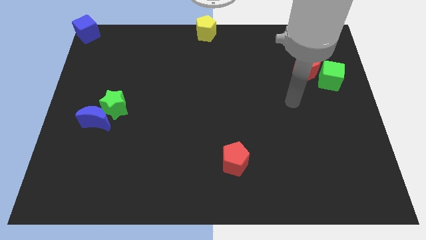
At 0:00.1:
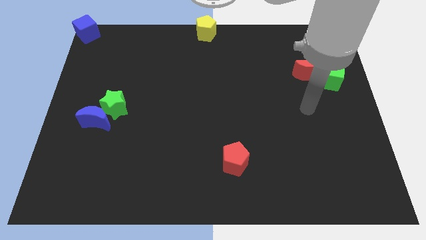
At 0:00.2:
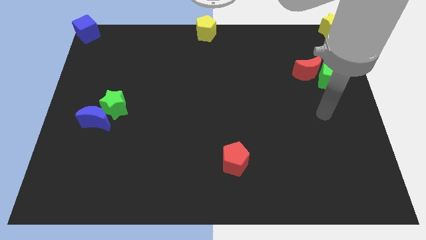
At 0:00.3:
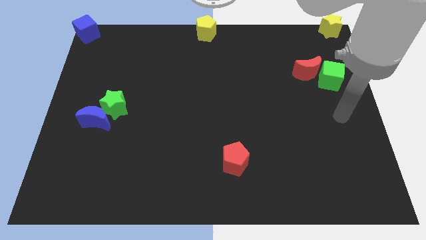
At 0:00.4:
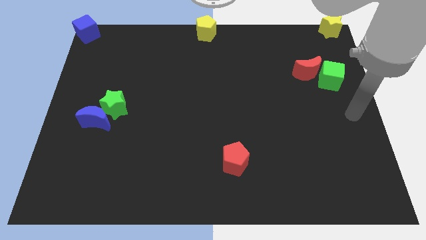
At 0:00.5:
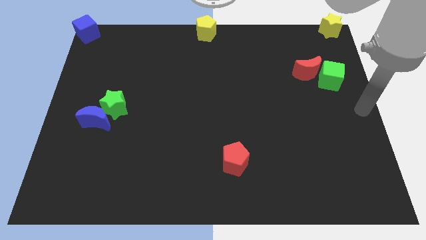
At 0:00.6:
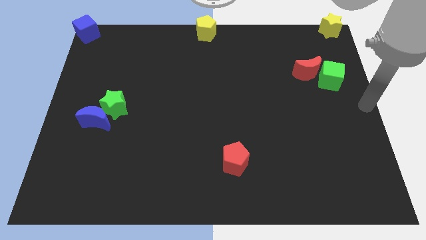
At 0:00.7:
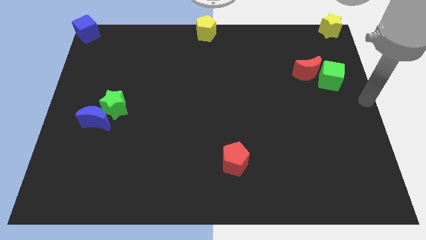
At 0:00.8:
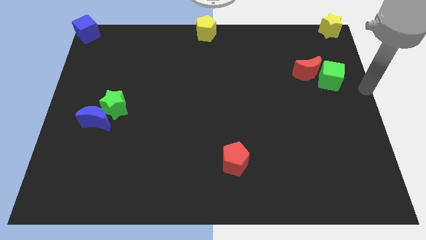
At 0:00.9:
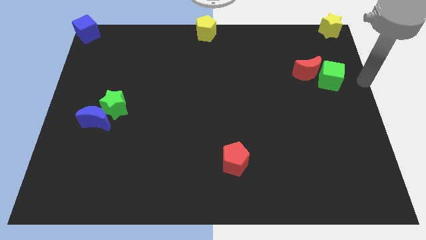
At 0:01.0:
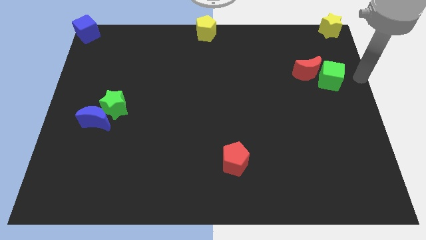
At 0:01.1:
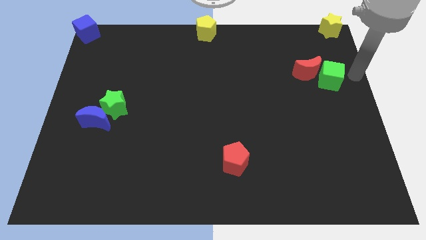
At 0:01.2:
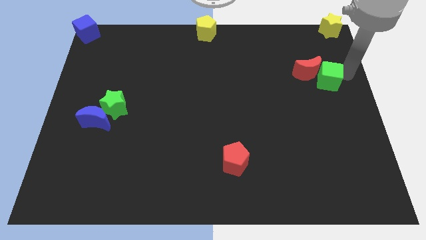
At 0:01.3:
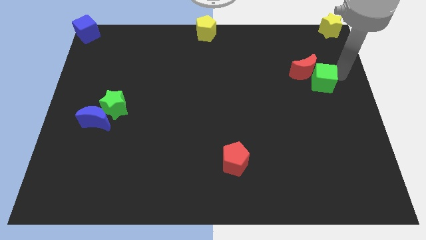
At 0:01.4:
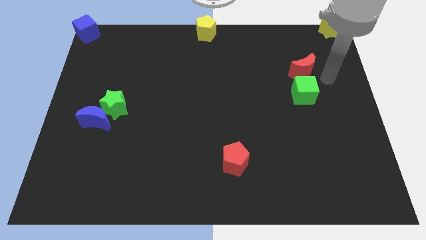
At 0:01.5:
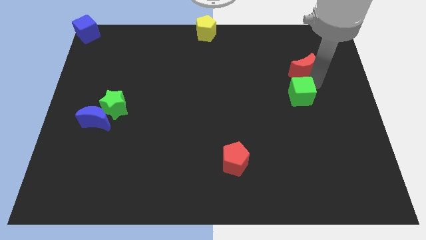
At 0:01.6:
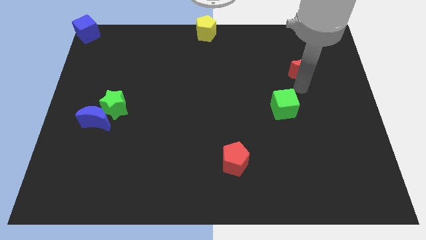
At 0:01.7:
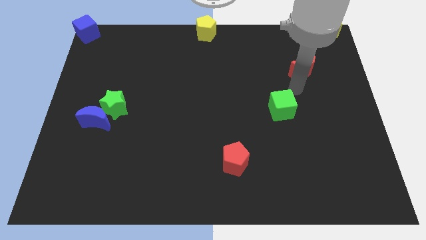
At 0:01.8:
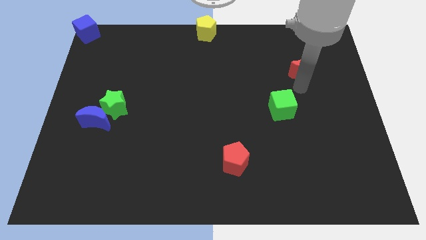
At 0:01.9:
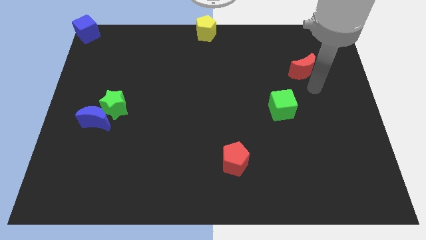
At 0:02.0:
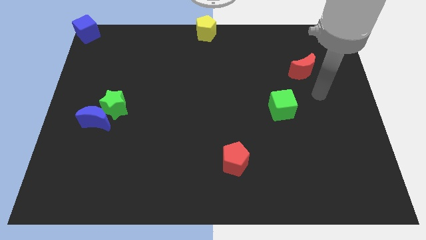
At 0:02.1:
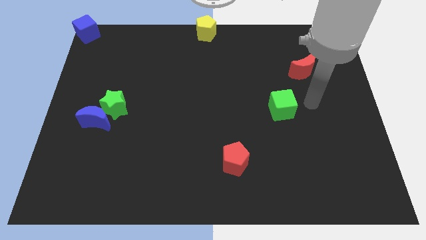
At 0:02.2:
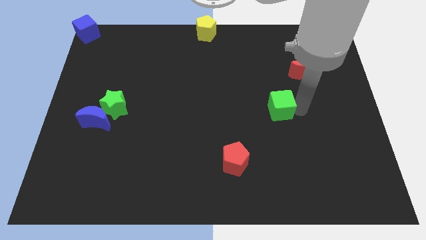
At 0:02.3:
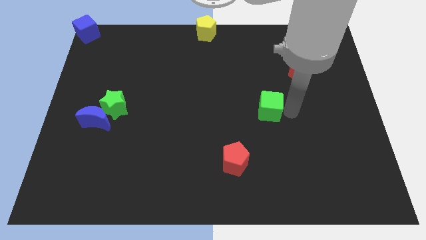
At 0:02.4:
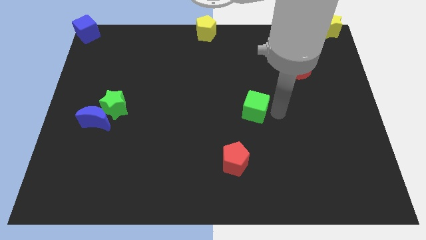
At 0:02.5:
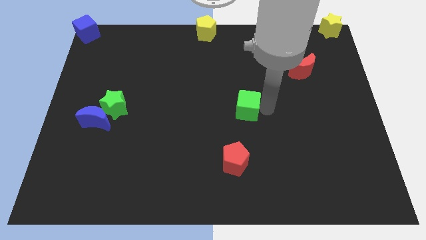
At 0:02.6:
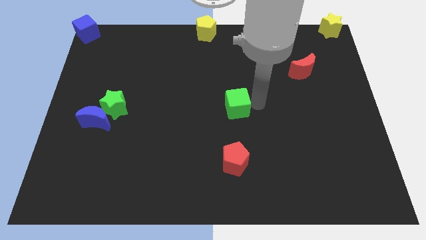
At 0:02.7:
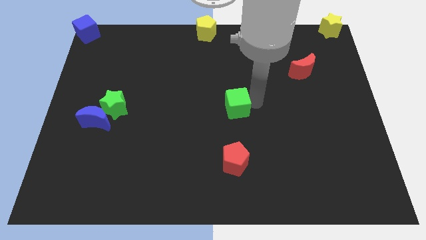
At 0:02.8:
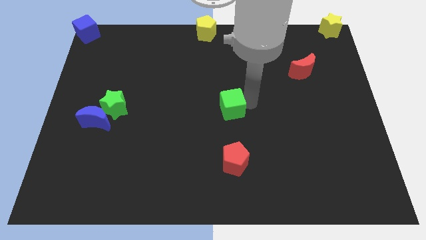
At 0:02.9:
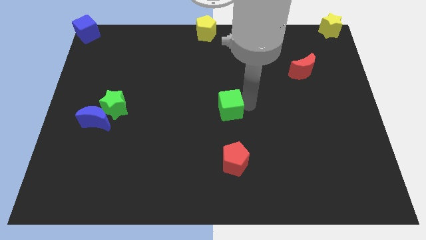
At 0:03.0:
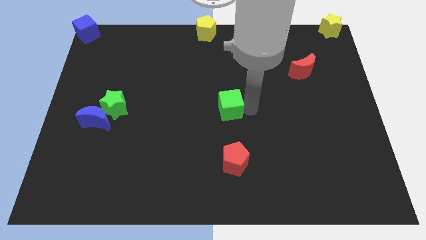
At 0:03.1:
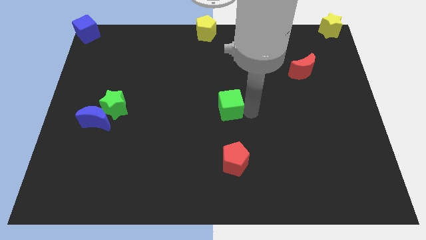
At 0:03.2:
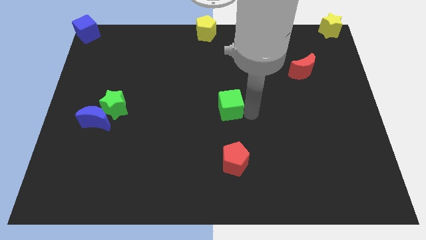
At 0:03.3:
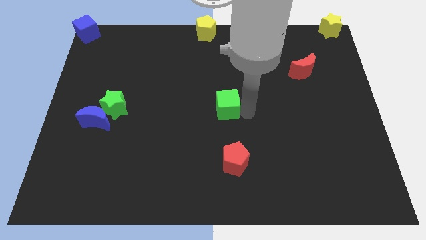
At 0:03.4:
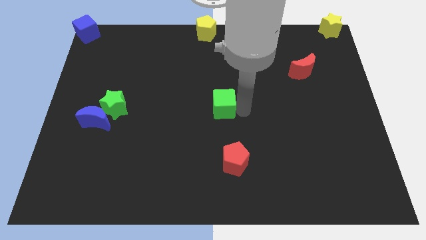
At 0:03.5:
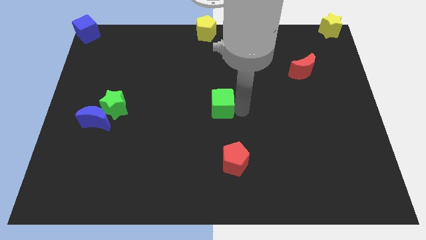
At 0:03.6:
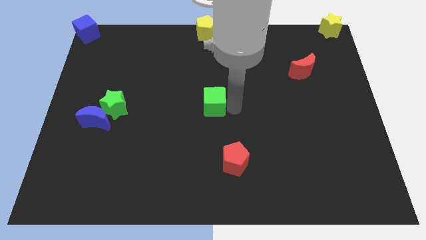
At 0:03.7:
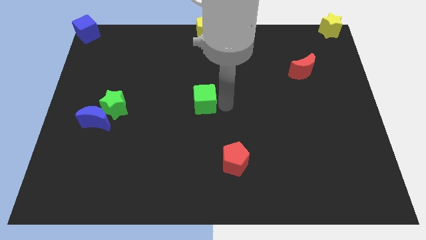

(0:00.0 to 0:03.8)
move the green cube to the center

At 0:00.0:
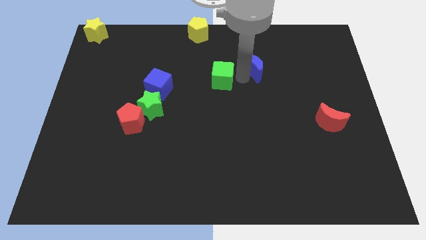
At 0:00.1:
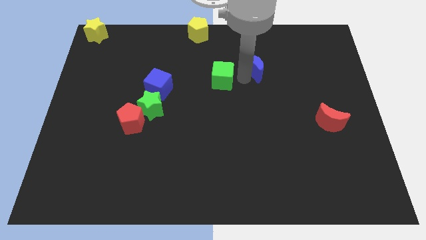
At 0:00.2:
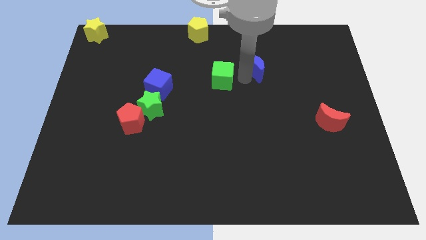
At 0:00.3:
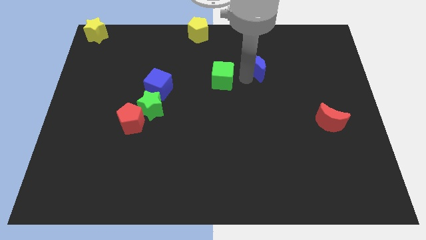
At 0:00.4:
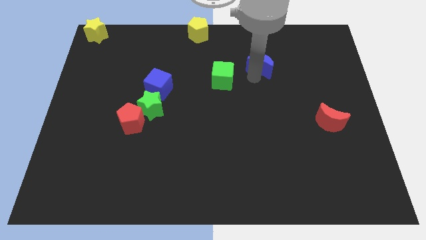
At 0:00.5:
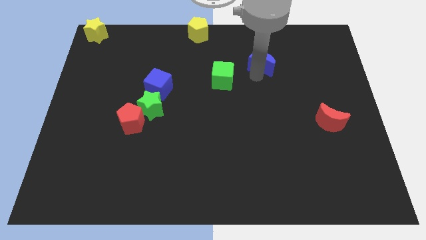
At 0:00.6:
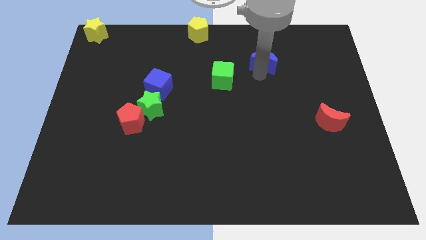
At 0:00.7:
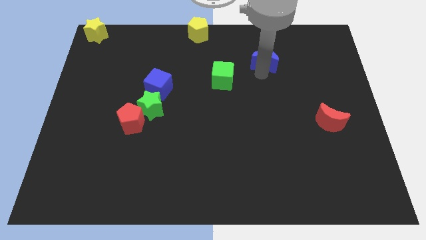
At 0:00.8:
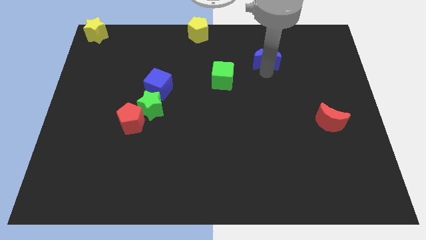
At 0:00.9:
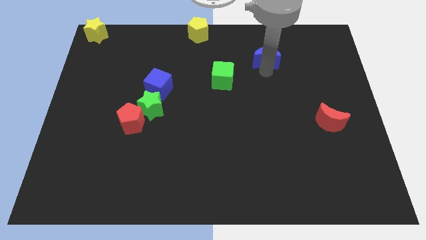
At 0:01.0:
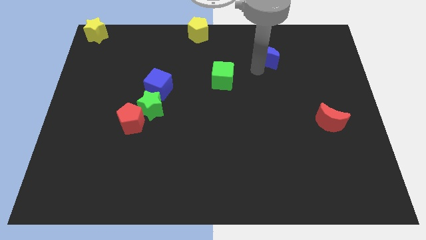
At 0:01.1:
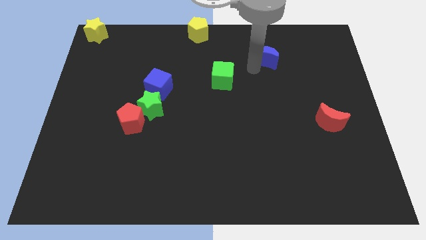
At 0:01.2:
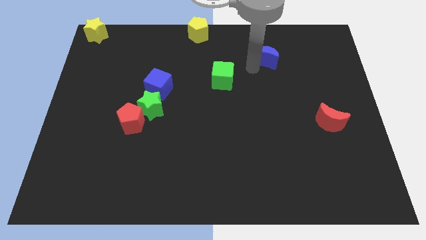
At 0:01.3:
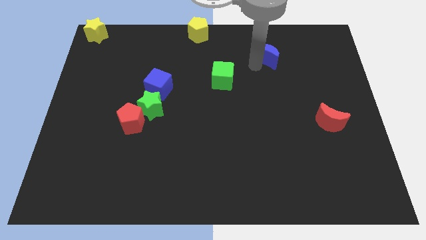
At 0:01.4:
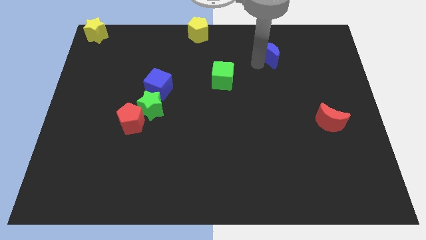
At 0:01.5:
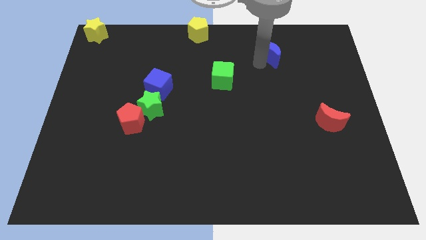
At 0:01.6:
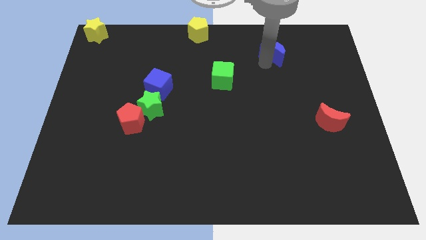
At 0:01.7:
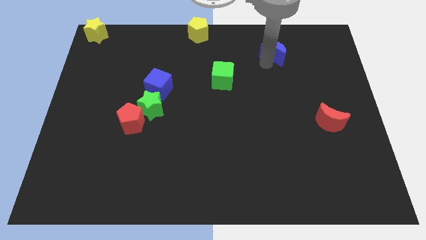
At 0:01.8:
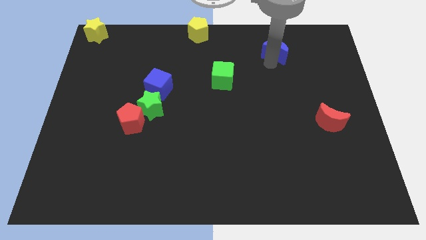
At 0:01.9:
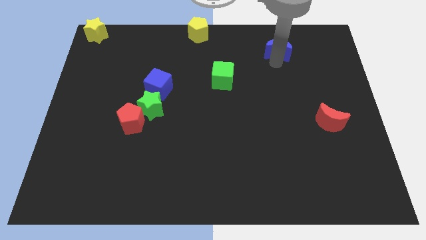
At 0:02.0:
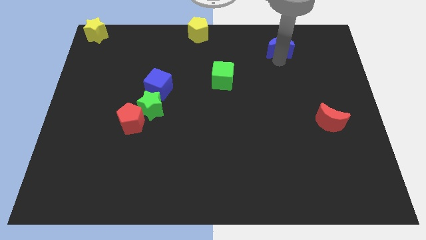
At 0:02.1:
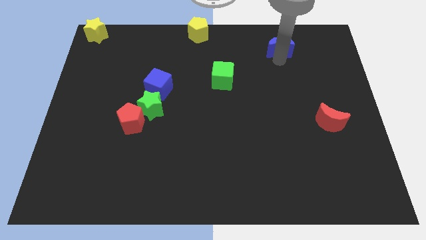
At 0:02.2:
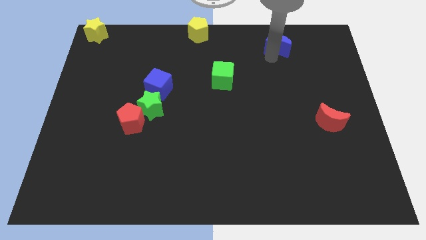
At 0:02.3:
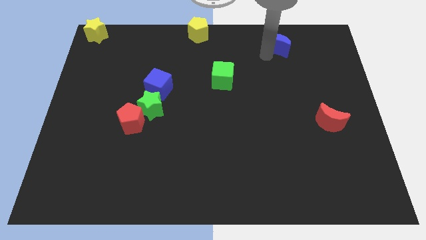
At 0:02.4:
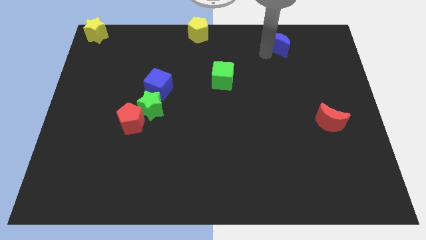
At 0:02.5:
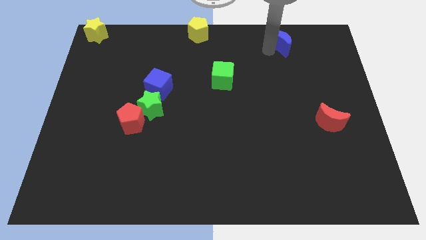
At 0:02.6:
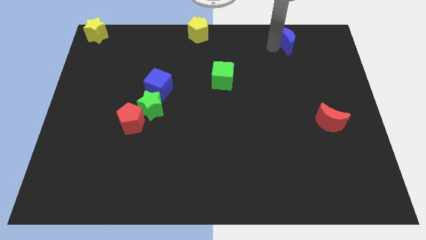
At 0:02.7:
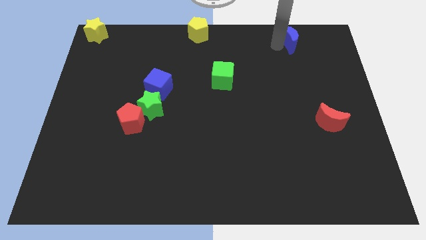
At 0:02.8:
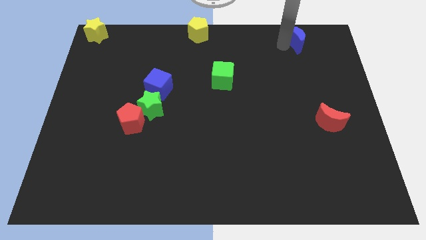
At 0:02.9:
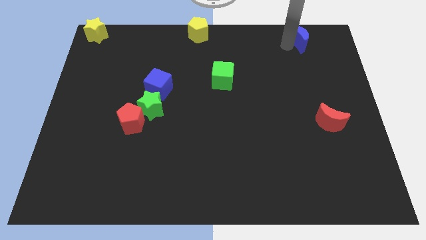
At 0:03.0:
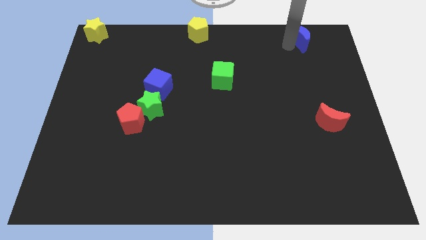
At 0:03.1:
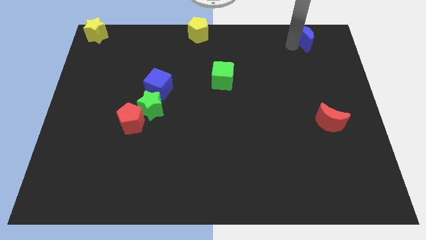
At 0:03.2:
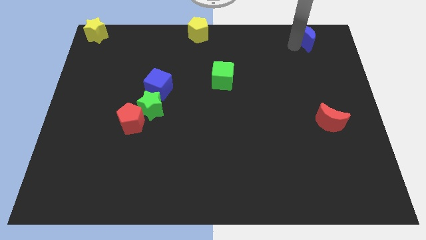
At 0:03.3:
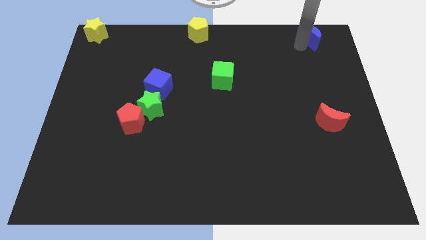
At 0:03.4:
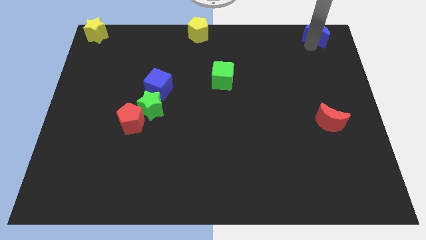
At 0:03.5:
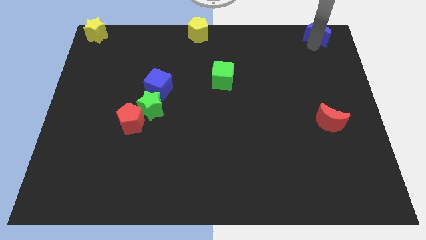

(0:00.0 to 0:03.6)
push the blue moon towards the top right side of the board

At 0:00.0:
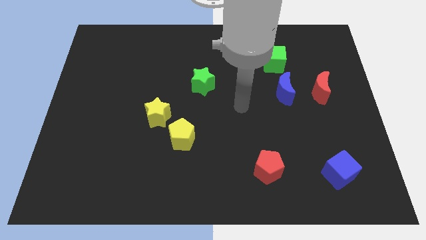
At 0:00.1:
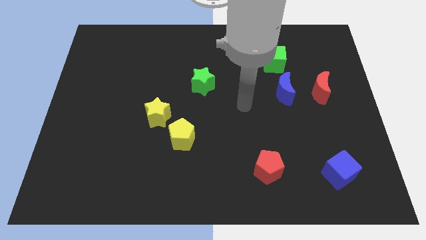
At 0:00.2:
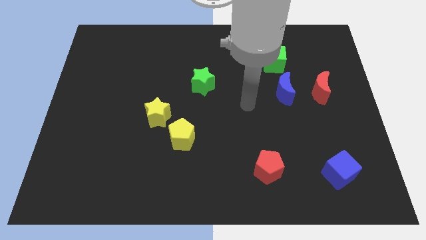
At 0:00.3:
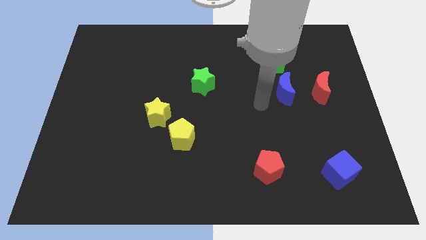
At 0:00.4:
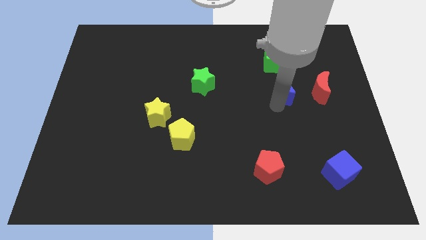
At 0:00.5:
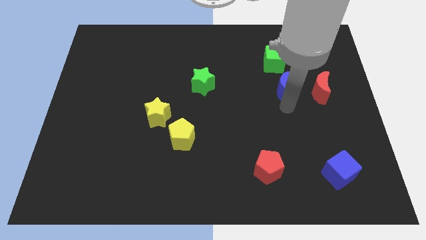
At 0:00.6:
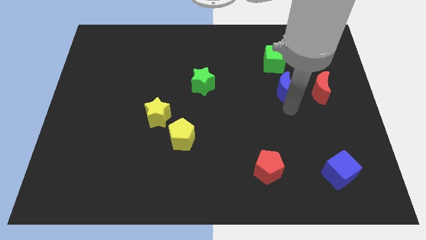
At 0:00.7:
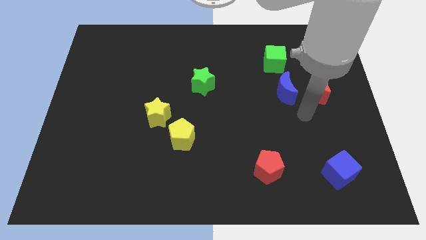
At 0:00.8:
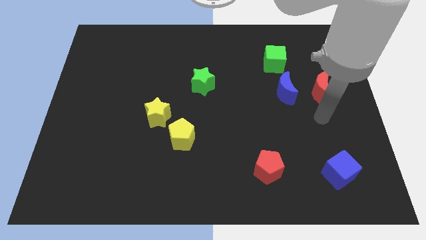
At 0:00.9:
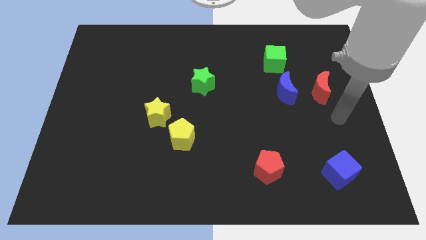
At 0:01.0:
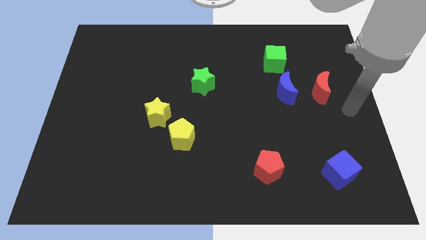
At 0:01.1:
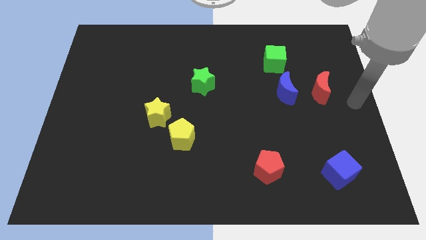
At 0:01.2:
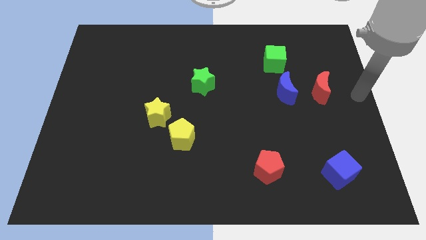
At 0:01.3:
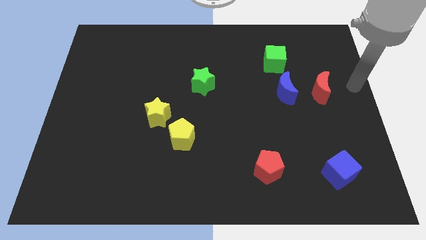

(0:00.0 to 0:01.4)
place your arm to the right center of the board

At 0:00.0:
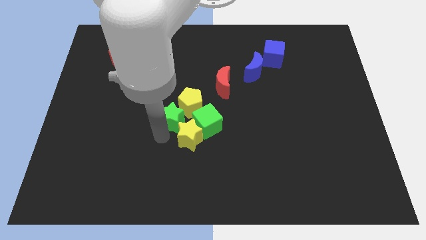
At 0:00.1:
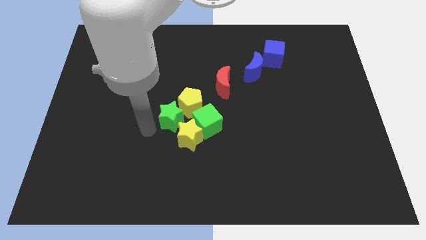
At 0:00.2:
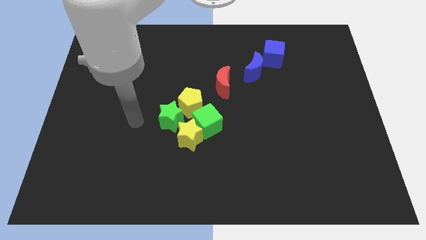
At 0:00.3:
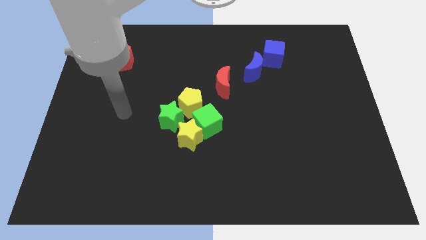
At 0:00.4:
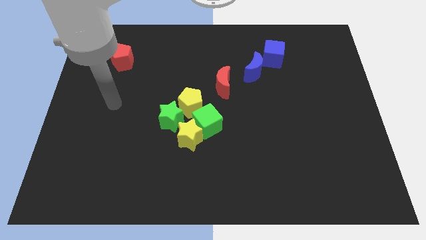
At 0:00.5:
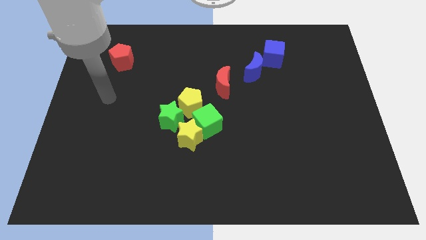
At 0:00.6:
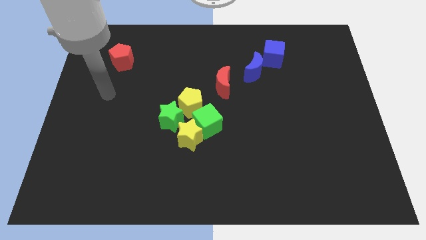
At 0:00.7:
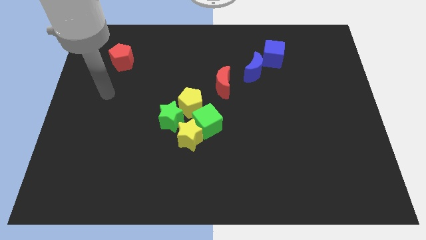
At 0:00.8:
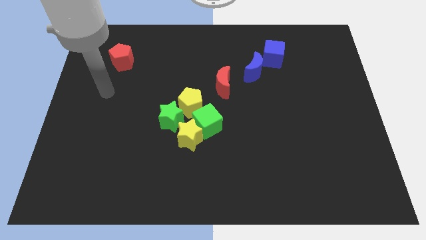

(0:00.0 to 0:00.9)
move your arm away from the green star
